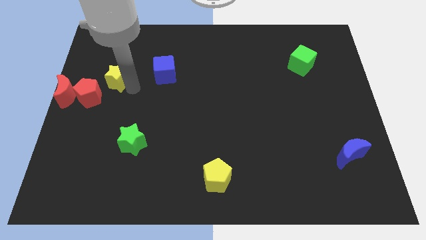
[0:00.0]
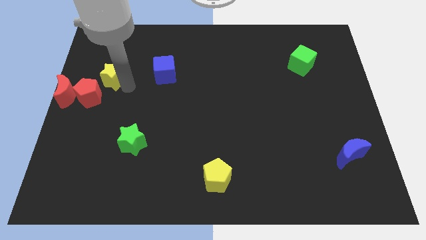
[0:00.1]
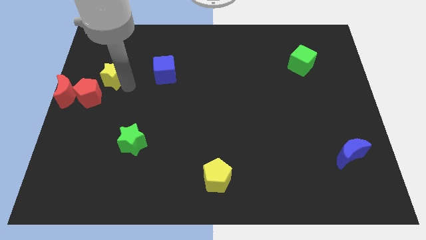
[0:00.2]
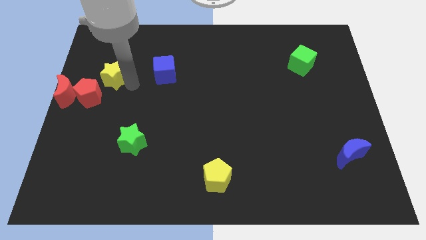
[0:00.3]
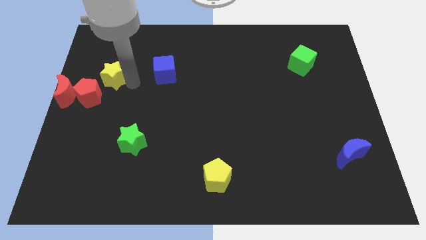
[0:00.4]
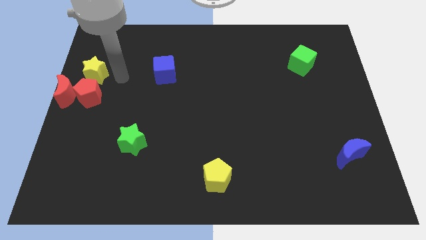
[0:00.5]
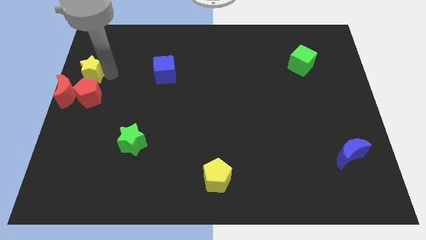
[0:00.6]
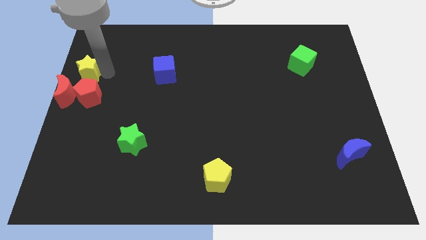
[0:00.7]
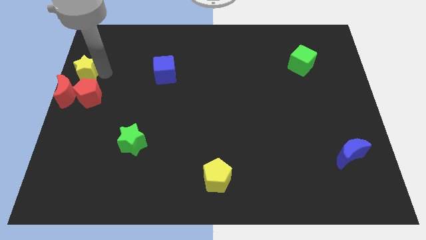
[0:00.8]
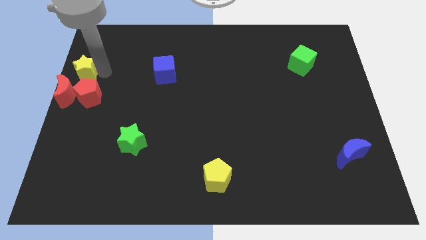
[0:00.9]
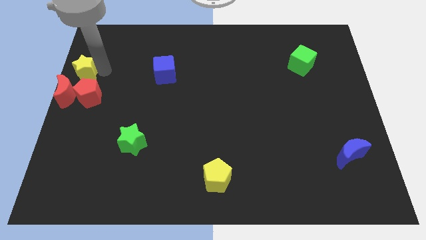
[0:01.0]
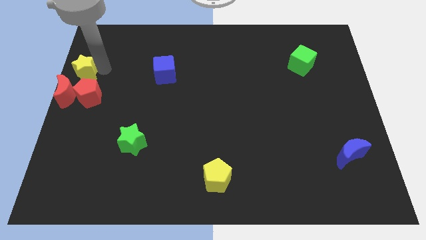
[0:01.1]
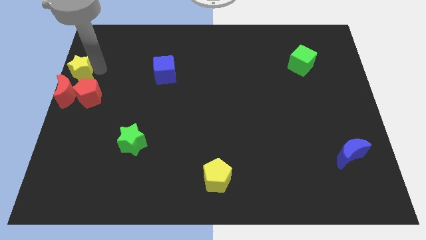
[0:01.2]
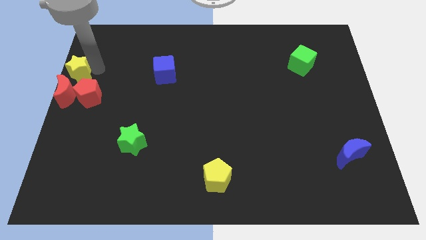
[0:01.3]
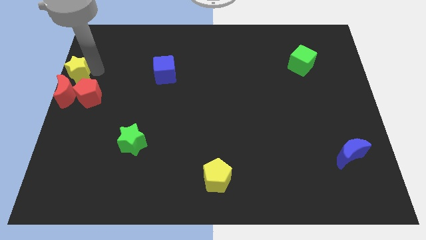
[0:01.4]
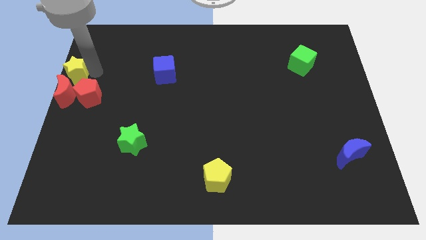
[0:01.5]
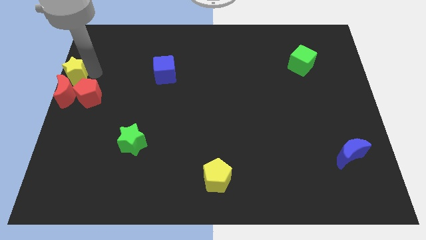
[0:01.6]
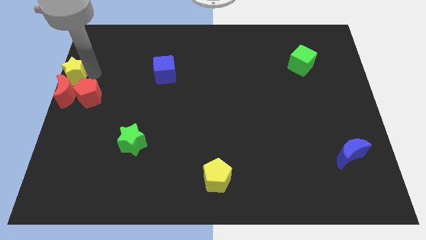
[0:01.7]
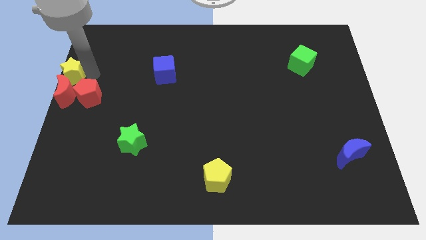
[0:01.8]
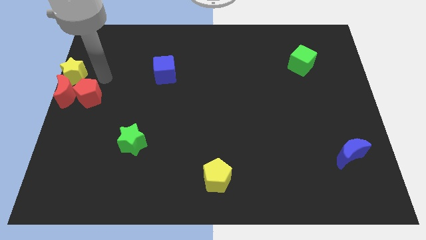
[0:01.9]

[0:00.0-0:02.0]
move the yellow star towards the top side of the red crescent

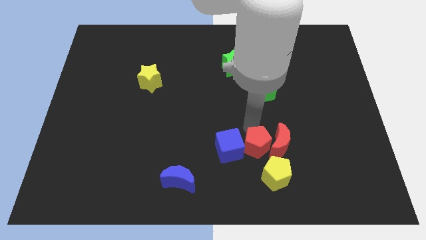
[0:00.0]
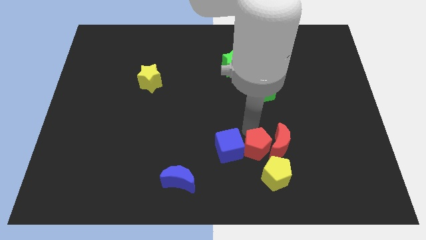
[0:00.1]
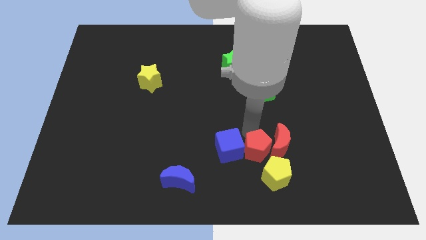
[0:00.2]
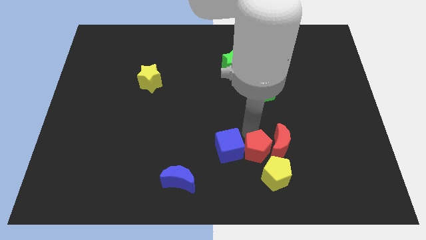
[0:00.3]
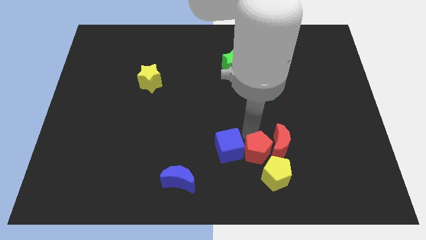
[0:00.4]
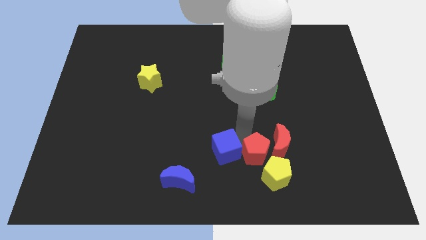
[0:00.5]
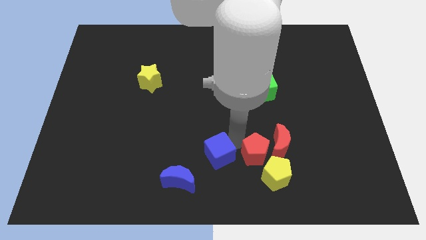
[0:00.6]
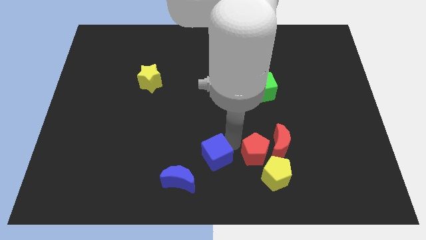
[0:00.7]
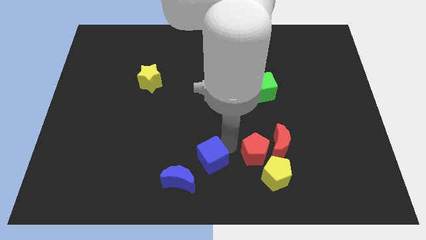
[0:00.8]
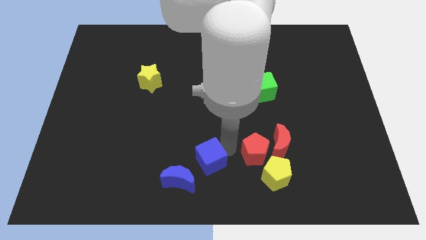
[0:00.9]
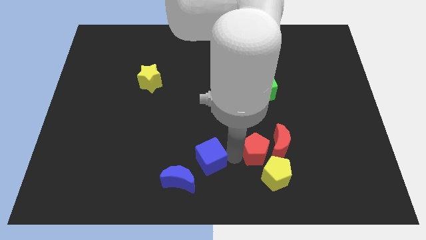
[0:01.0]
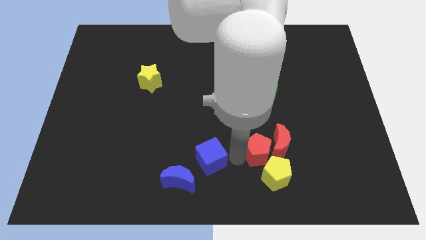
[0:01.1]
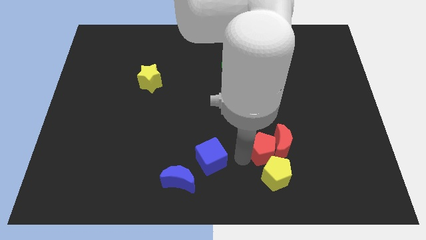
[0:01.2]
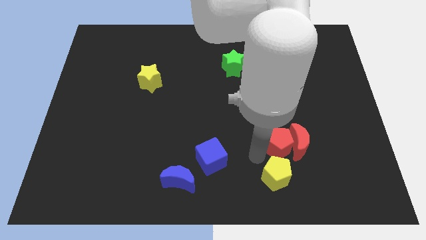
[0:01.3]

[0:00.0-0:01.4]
move the blue cube towards the blue crescent

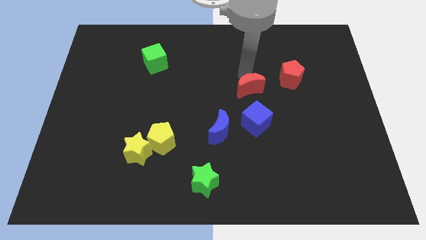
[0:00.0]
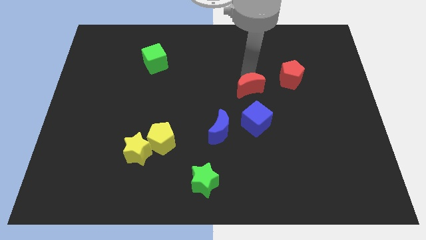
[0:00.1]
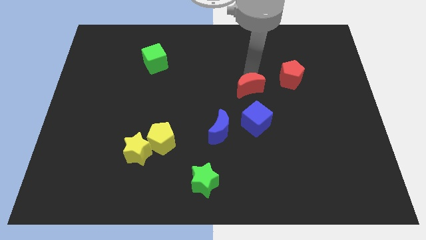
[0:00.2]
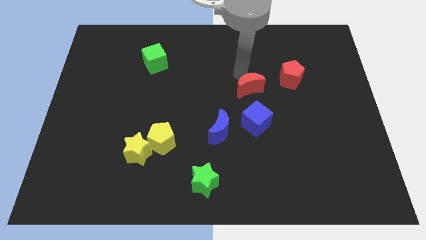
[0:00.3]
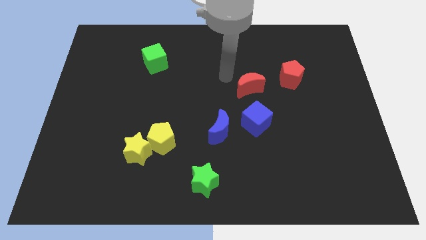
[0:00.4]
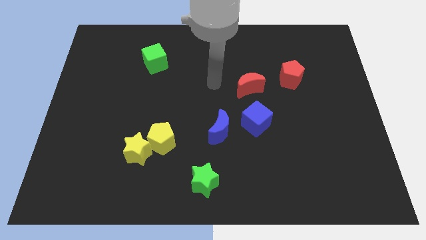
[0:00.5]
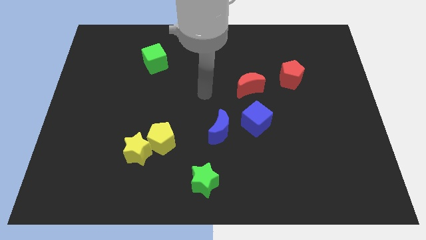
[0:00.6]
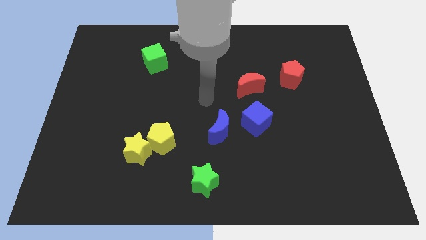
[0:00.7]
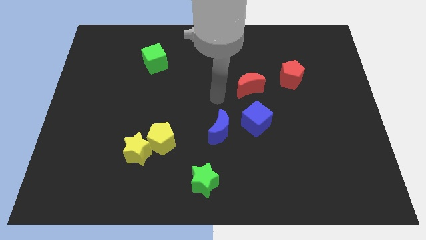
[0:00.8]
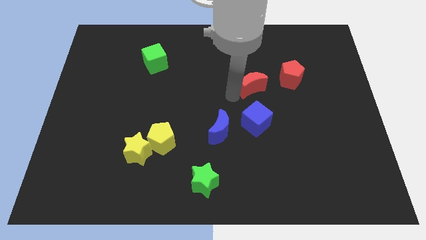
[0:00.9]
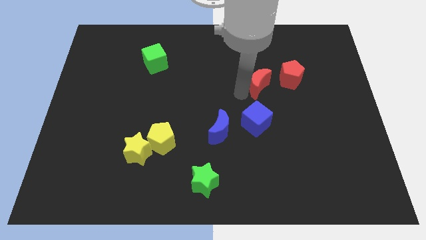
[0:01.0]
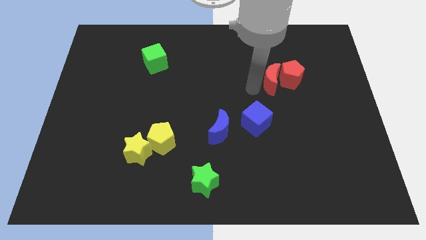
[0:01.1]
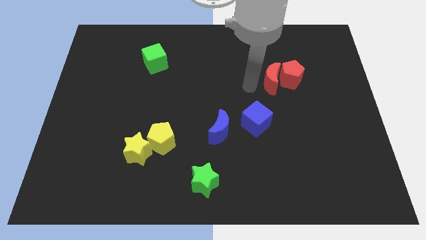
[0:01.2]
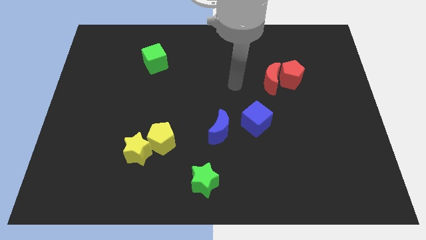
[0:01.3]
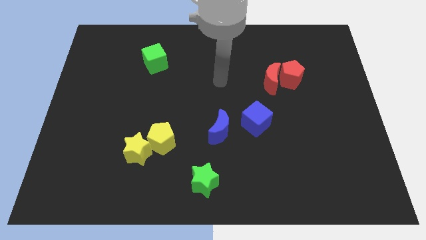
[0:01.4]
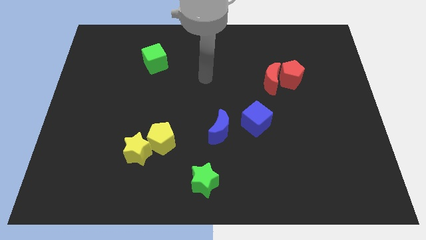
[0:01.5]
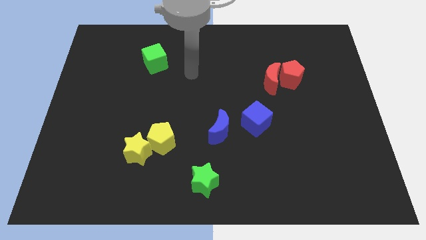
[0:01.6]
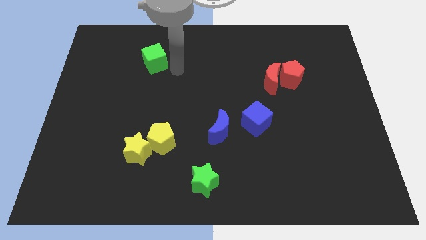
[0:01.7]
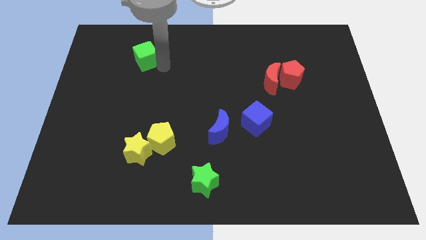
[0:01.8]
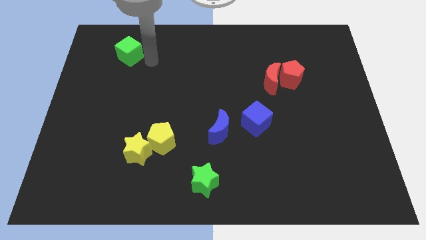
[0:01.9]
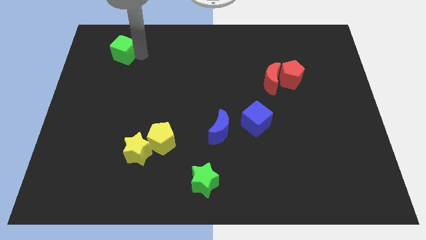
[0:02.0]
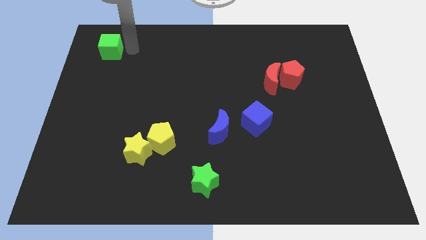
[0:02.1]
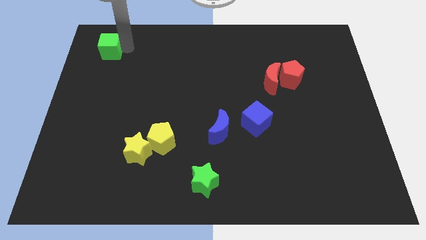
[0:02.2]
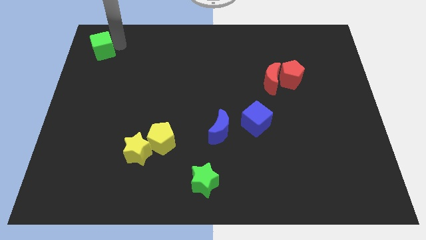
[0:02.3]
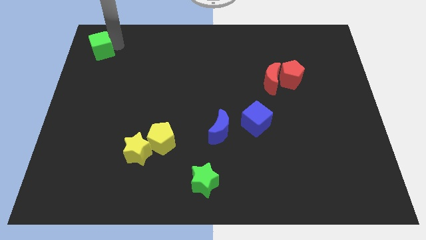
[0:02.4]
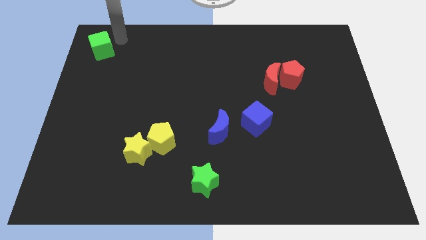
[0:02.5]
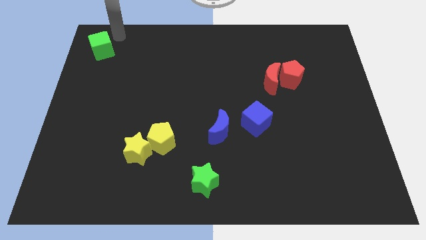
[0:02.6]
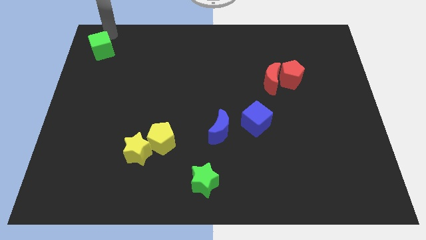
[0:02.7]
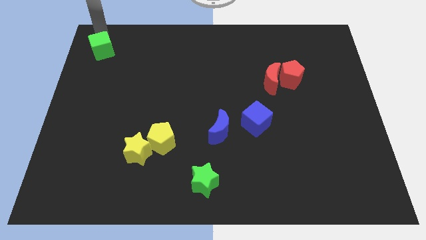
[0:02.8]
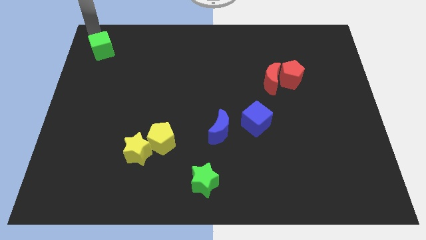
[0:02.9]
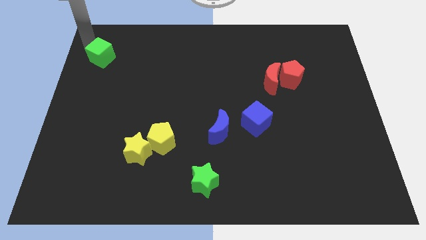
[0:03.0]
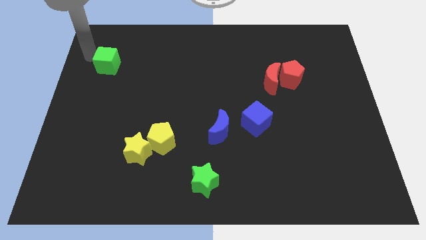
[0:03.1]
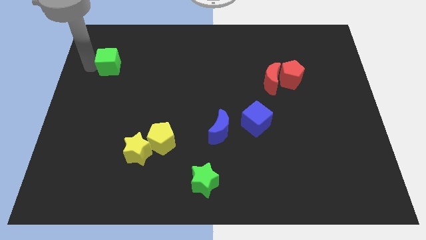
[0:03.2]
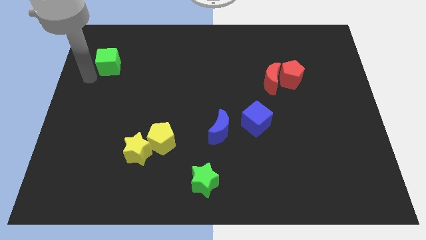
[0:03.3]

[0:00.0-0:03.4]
move green cube slightly downwards

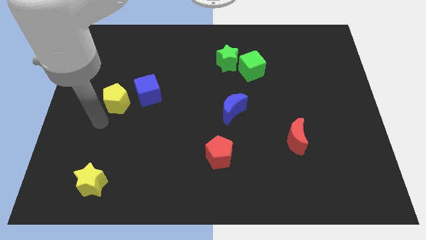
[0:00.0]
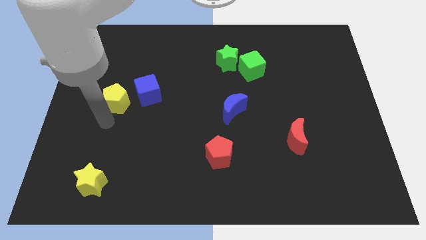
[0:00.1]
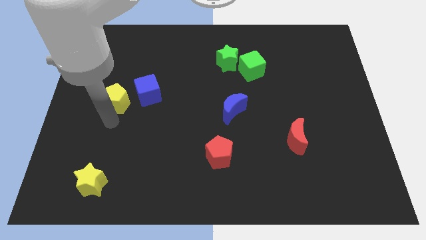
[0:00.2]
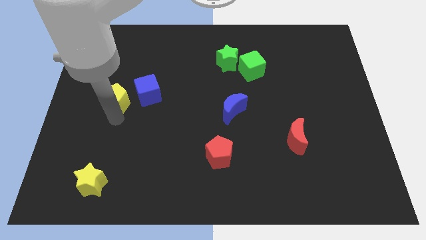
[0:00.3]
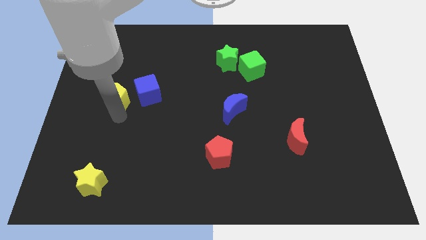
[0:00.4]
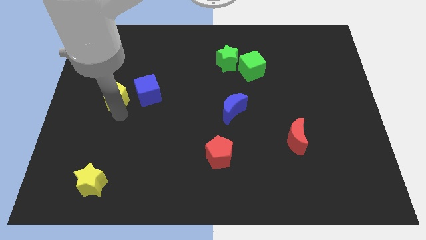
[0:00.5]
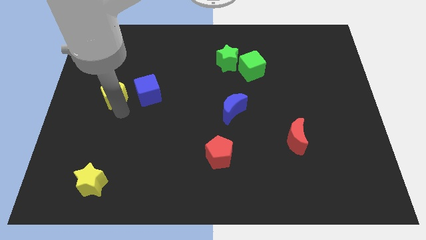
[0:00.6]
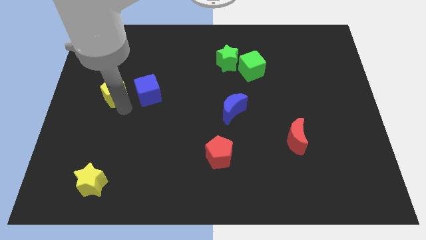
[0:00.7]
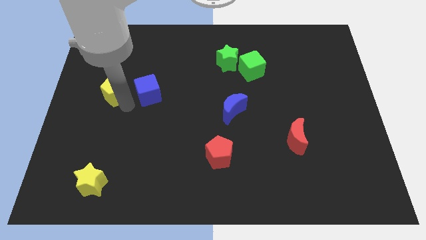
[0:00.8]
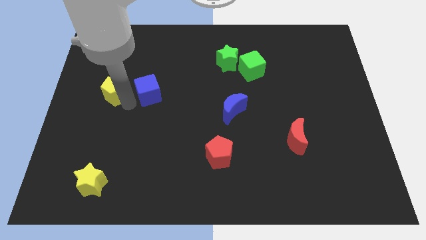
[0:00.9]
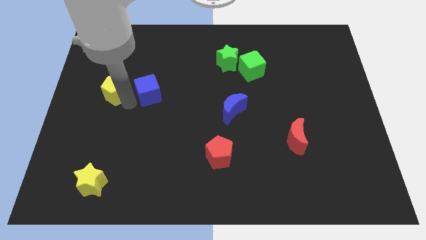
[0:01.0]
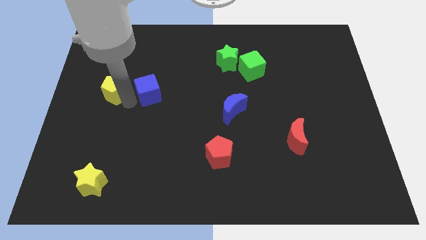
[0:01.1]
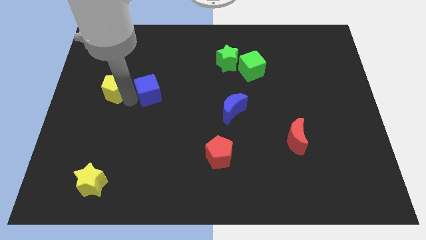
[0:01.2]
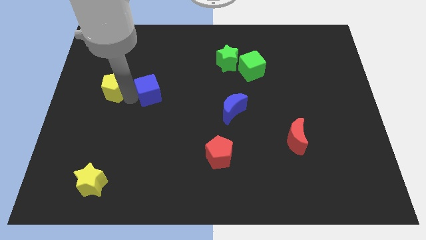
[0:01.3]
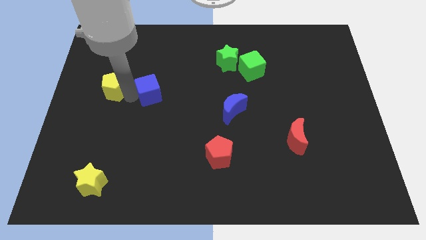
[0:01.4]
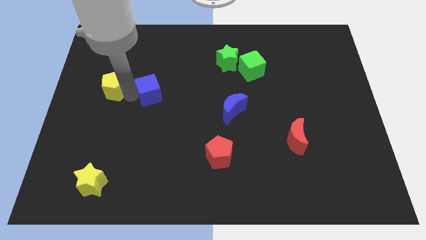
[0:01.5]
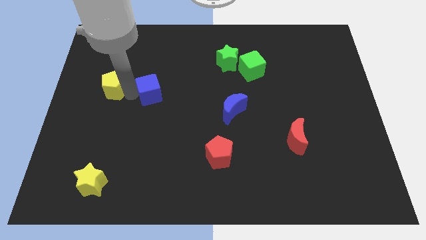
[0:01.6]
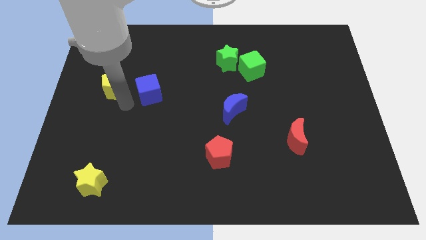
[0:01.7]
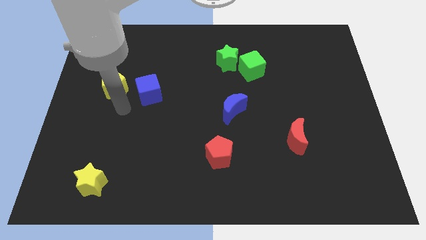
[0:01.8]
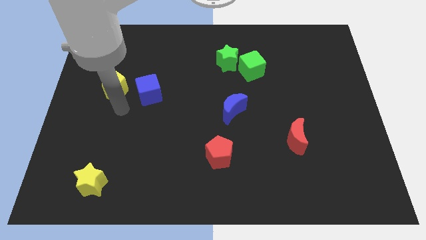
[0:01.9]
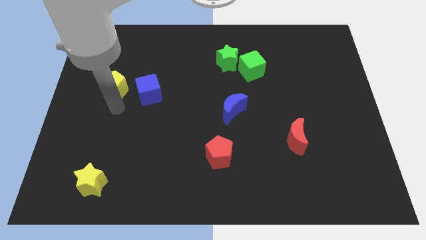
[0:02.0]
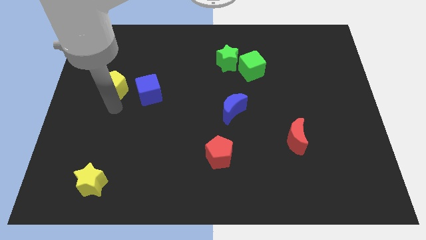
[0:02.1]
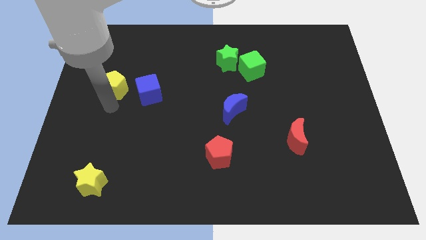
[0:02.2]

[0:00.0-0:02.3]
slightly push the yellow pentagon diagonal to the left of the blue cube
